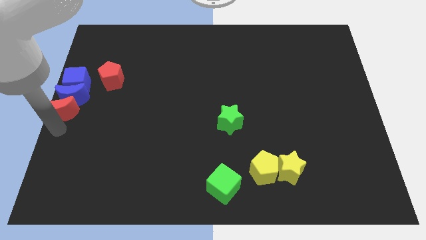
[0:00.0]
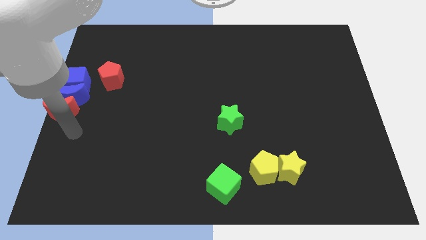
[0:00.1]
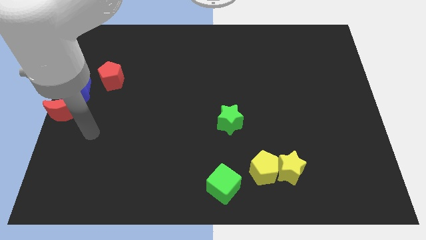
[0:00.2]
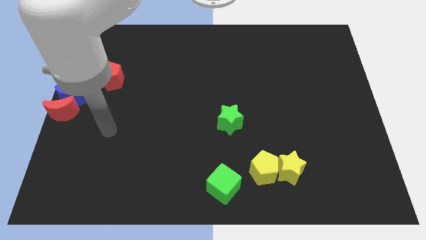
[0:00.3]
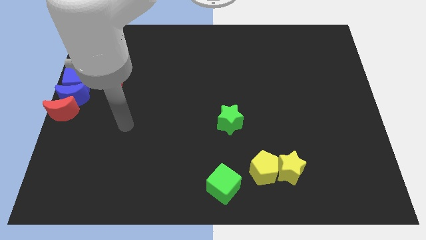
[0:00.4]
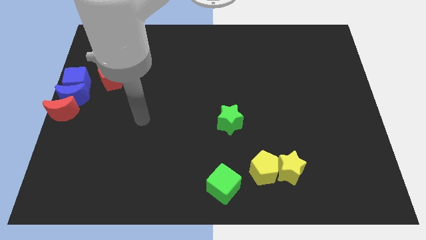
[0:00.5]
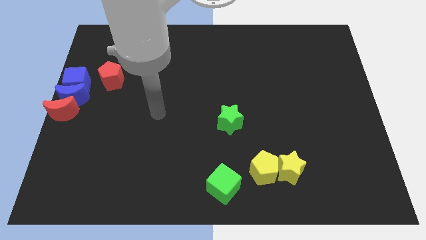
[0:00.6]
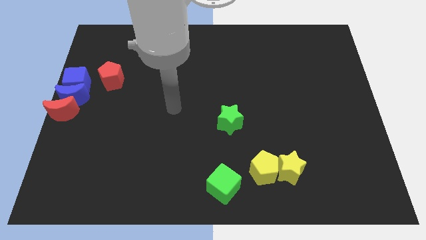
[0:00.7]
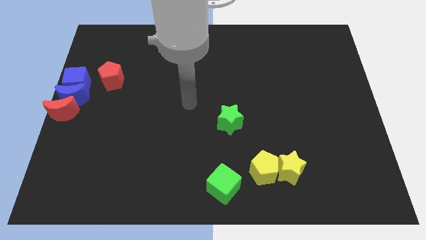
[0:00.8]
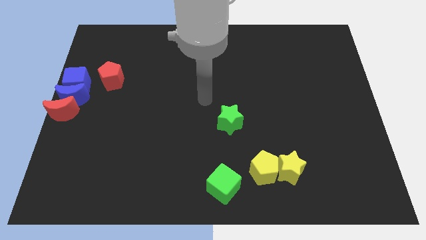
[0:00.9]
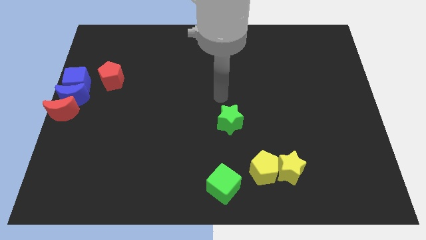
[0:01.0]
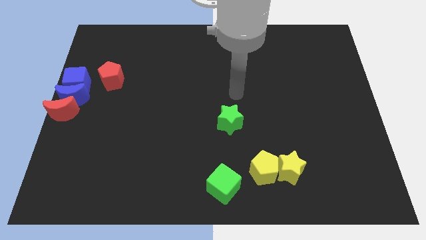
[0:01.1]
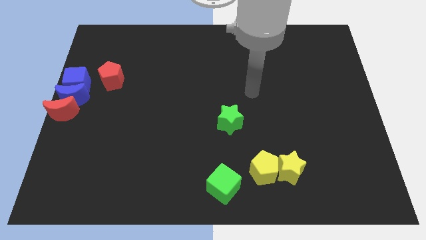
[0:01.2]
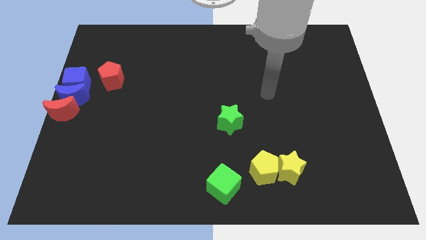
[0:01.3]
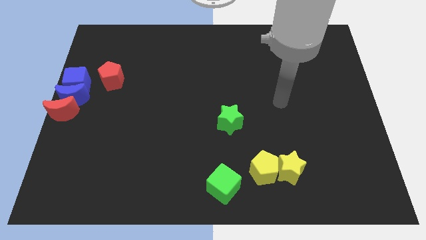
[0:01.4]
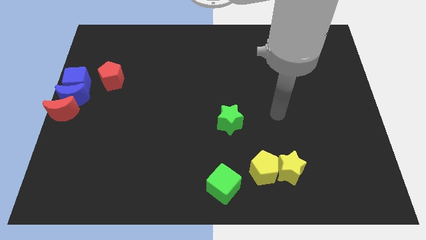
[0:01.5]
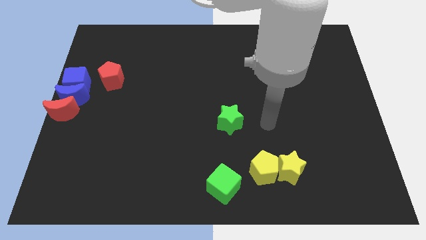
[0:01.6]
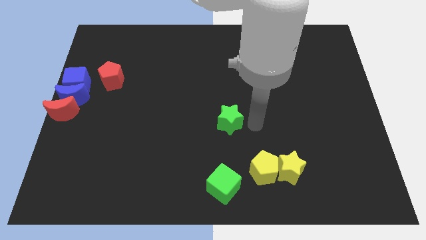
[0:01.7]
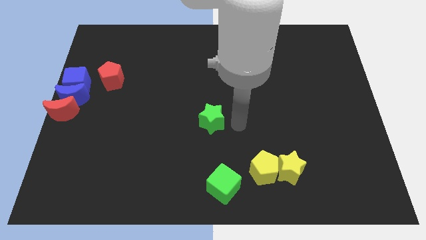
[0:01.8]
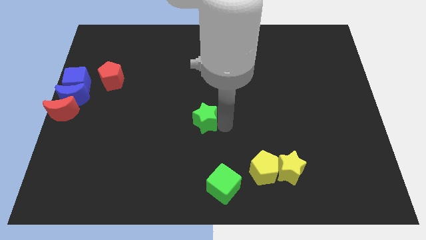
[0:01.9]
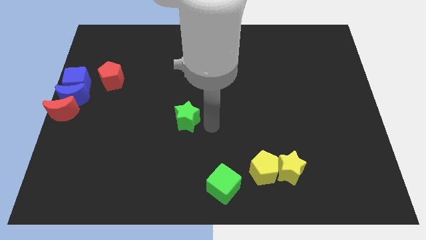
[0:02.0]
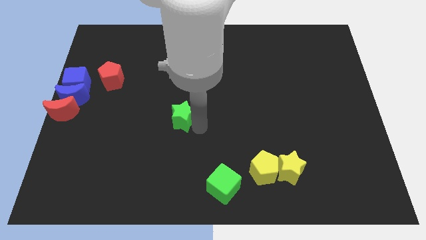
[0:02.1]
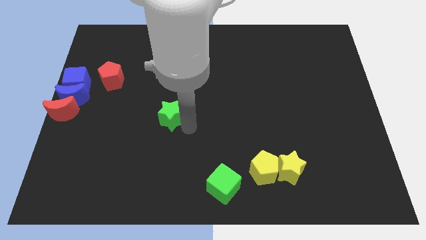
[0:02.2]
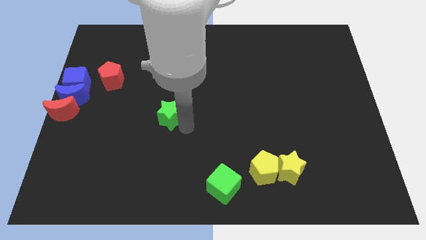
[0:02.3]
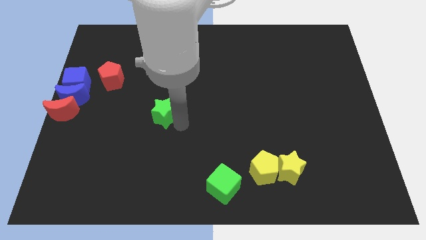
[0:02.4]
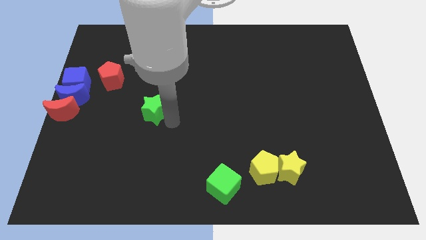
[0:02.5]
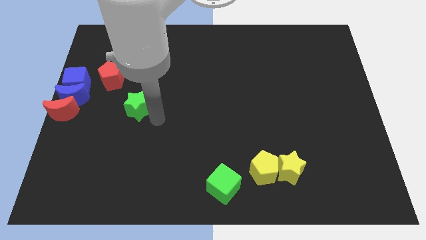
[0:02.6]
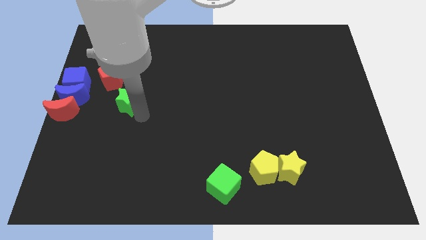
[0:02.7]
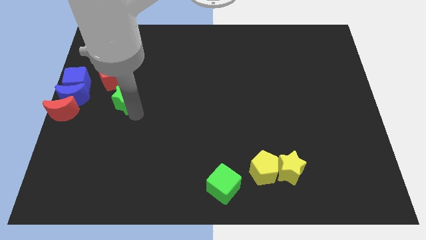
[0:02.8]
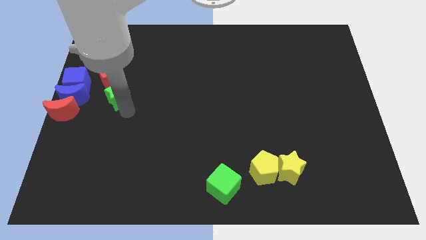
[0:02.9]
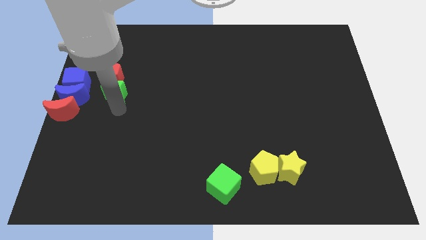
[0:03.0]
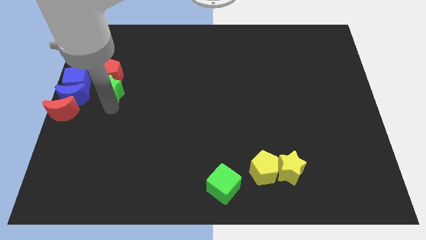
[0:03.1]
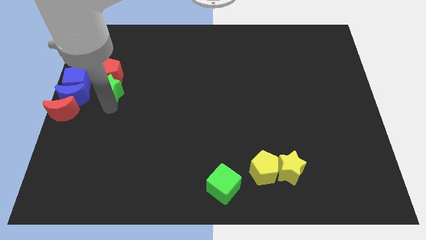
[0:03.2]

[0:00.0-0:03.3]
push the green star into the red pentagon

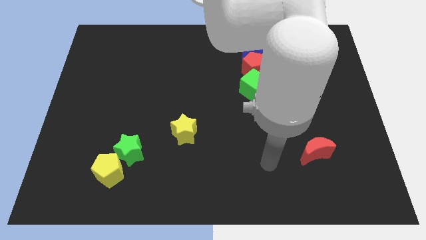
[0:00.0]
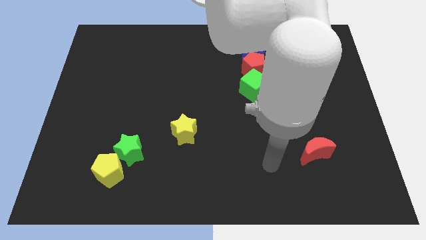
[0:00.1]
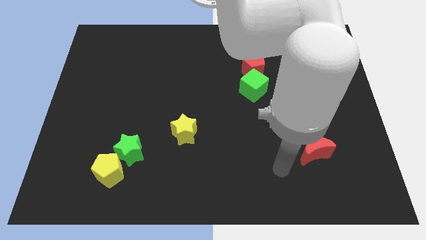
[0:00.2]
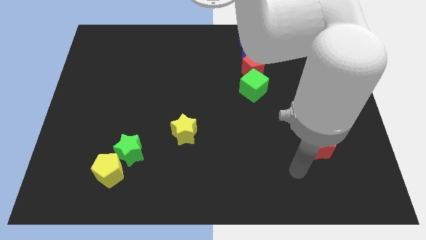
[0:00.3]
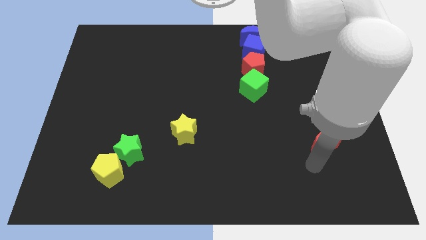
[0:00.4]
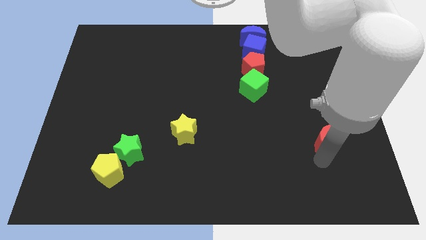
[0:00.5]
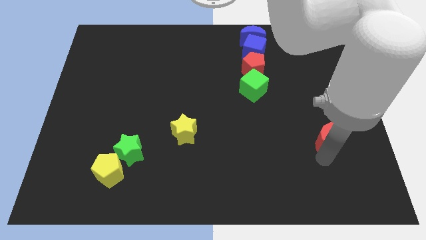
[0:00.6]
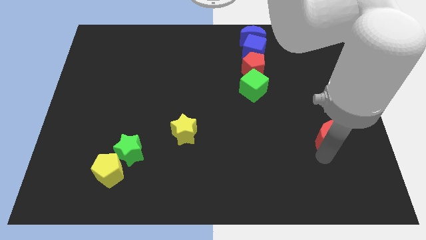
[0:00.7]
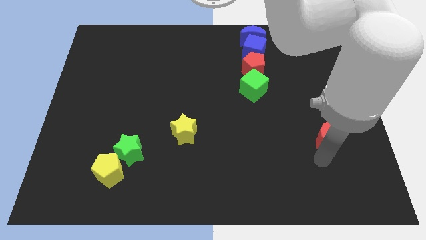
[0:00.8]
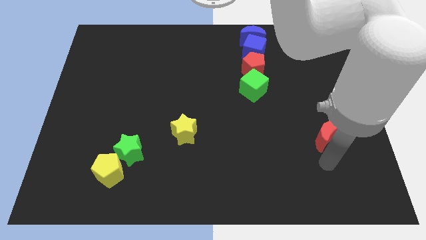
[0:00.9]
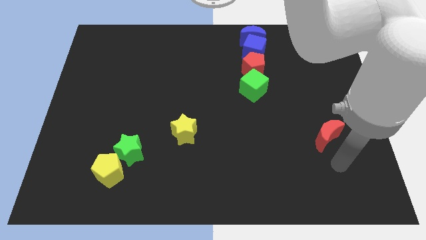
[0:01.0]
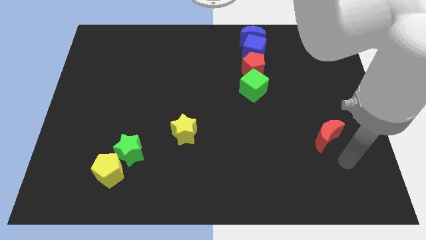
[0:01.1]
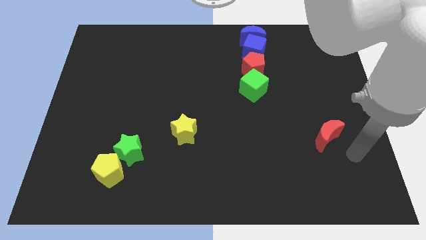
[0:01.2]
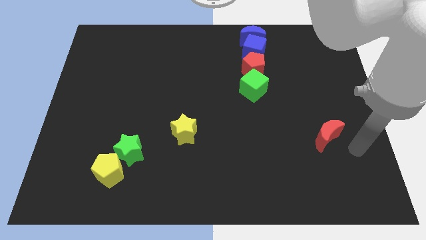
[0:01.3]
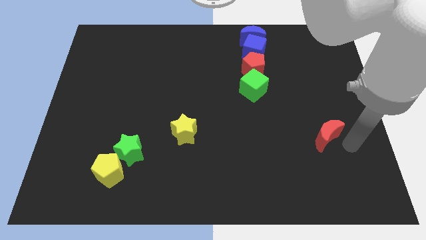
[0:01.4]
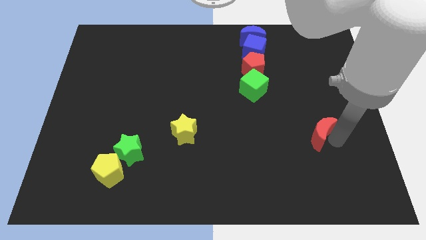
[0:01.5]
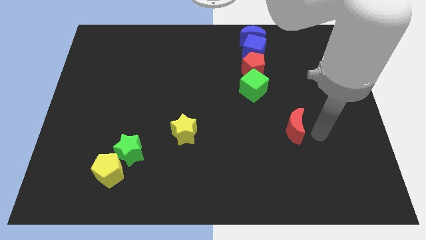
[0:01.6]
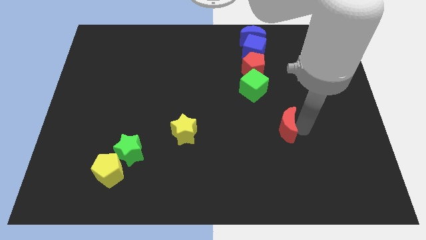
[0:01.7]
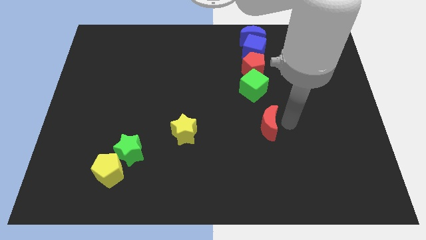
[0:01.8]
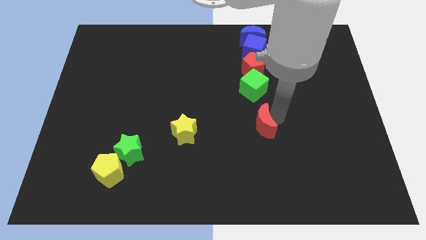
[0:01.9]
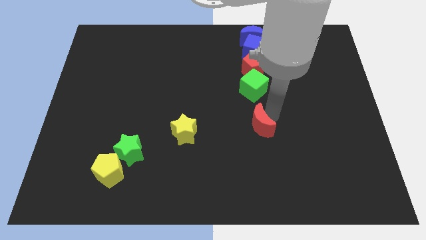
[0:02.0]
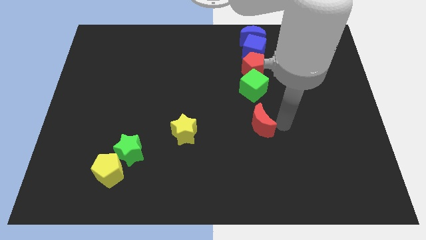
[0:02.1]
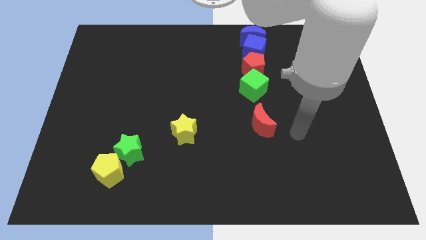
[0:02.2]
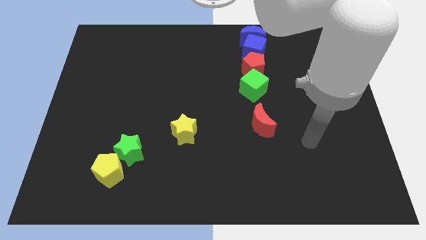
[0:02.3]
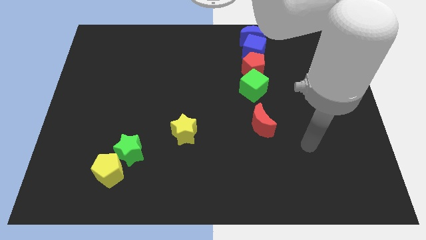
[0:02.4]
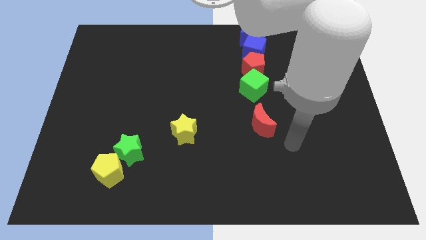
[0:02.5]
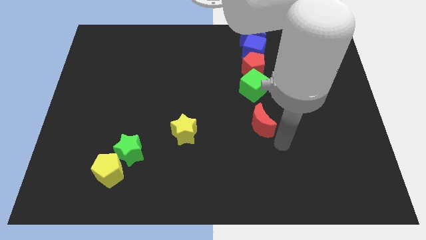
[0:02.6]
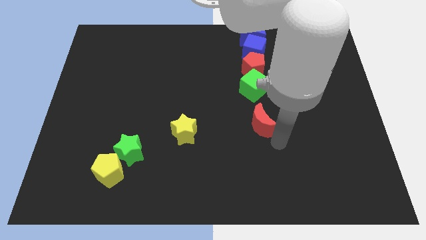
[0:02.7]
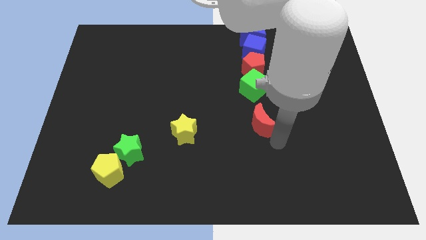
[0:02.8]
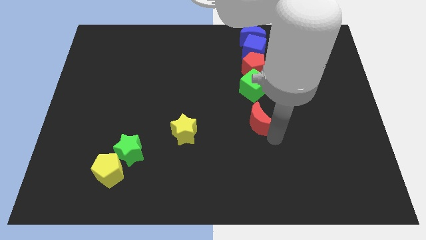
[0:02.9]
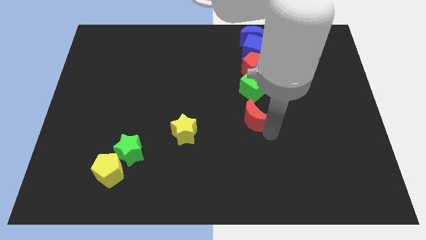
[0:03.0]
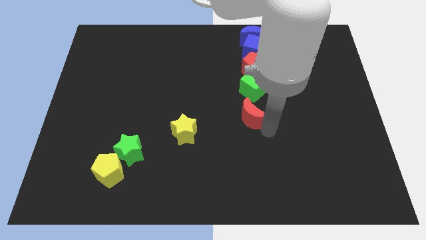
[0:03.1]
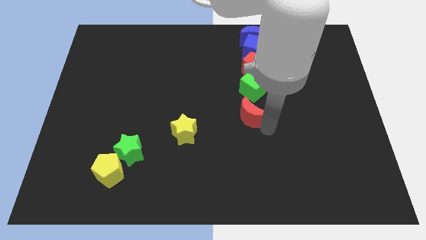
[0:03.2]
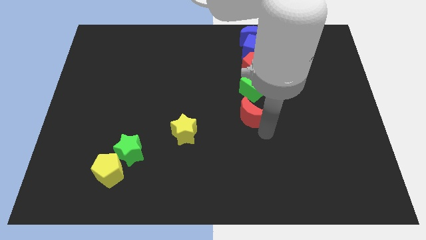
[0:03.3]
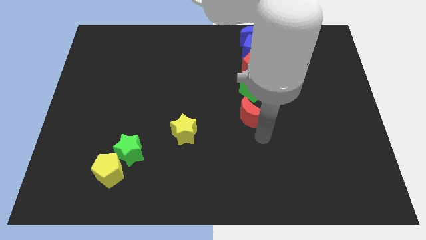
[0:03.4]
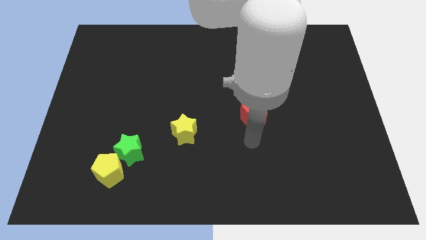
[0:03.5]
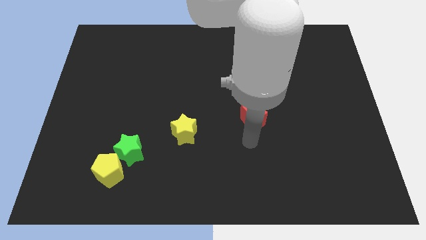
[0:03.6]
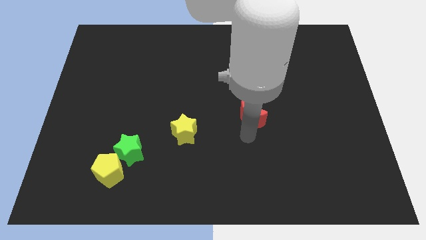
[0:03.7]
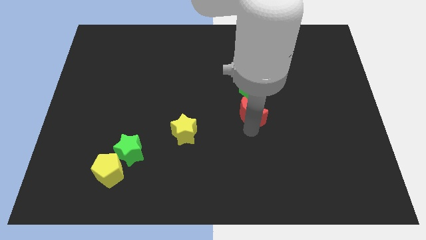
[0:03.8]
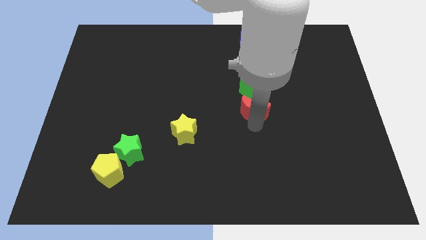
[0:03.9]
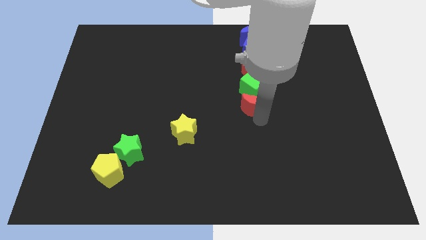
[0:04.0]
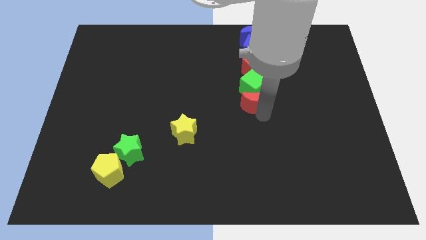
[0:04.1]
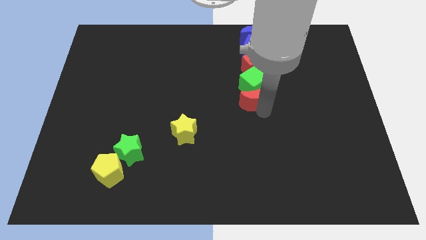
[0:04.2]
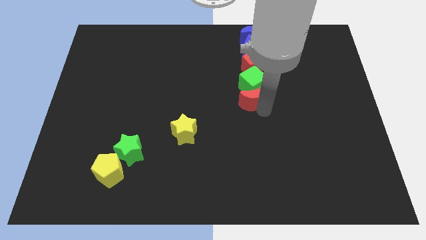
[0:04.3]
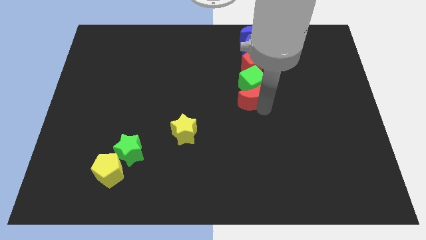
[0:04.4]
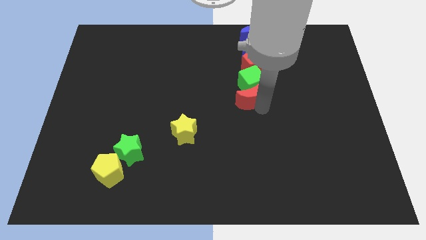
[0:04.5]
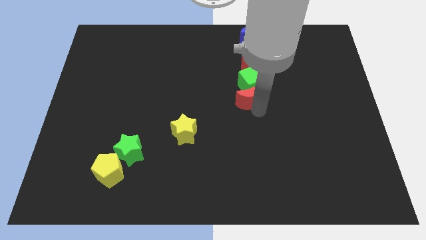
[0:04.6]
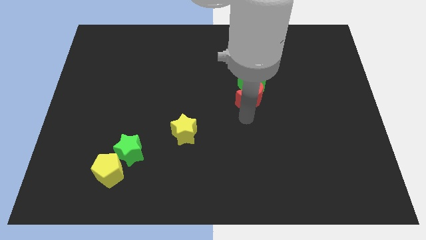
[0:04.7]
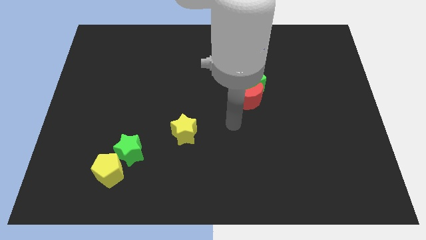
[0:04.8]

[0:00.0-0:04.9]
place the red crescent back to the green cube

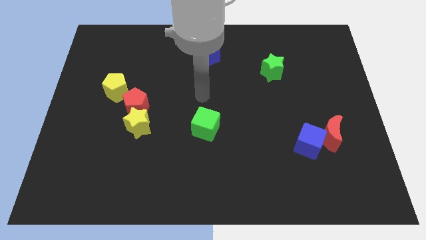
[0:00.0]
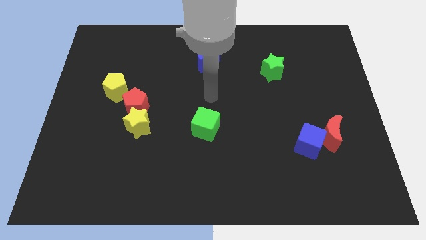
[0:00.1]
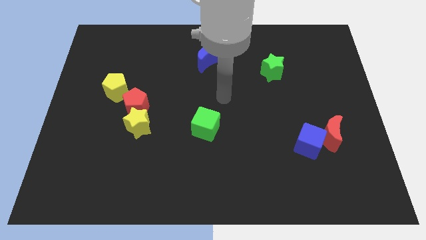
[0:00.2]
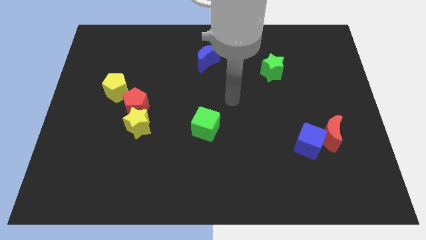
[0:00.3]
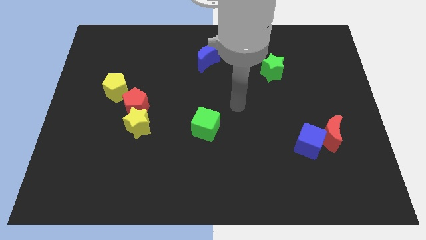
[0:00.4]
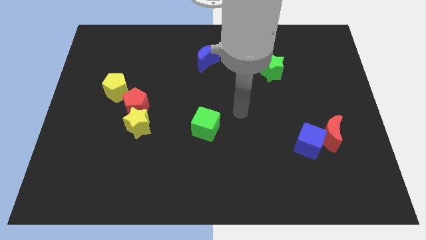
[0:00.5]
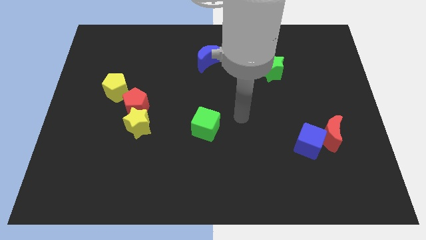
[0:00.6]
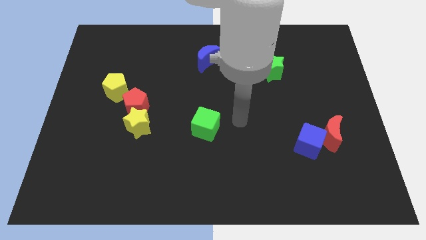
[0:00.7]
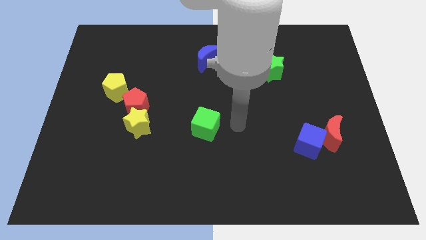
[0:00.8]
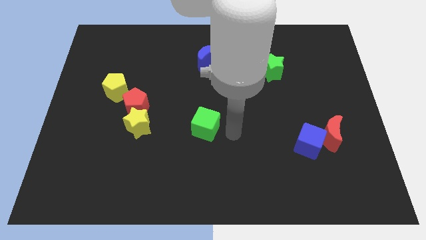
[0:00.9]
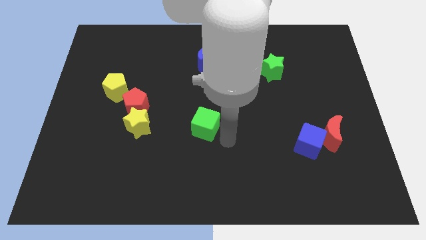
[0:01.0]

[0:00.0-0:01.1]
place your arm to the right of the green cube
